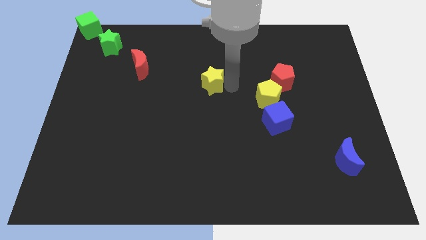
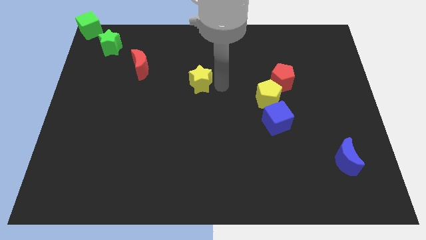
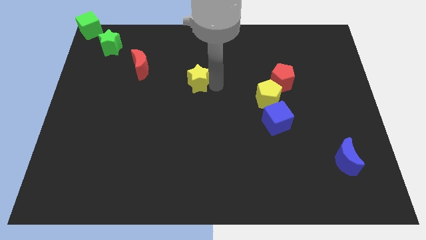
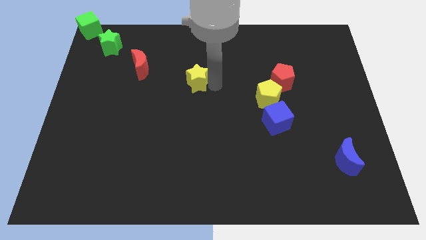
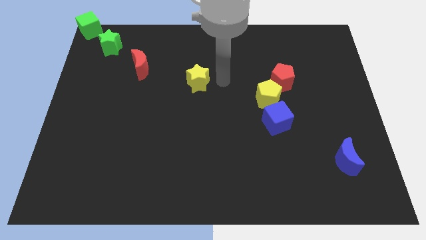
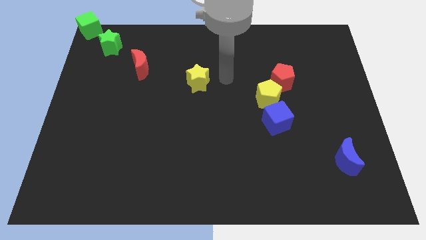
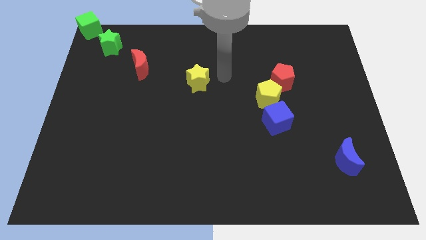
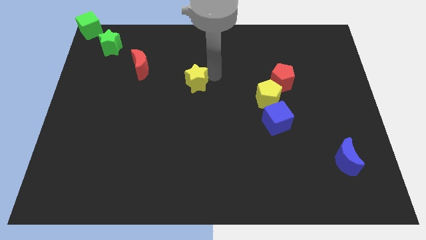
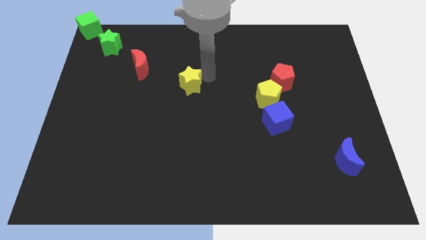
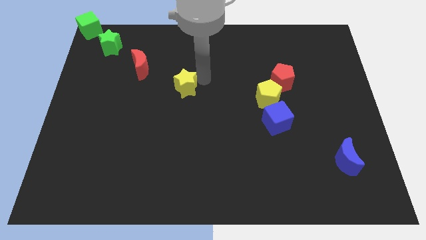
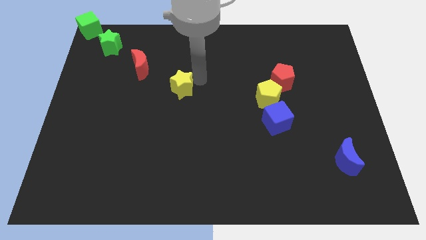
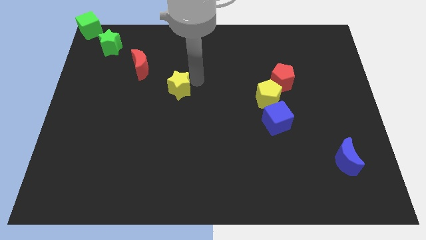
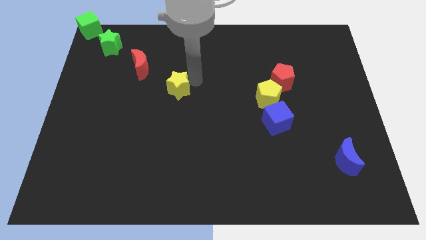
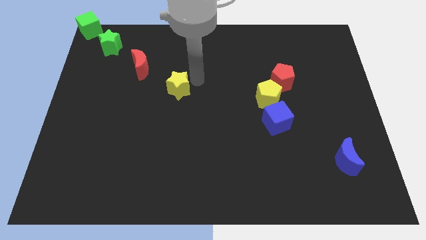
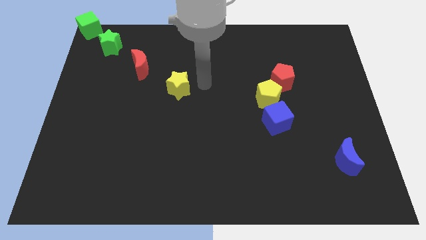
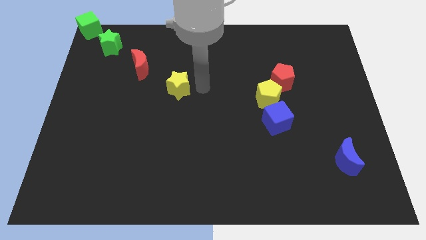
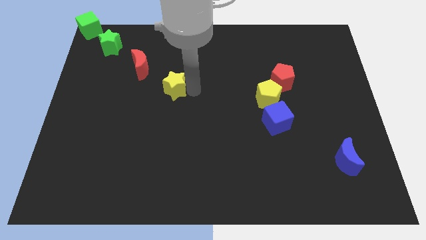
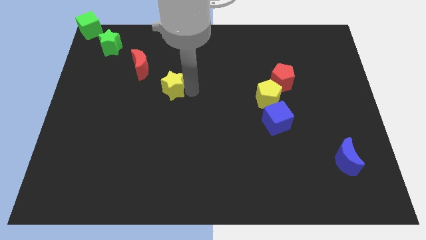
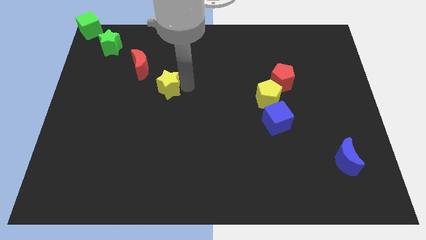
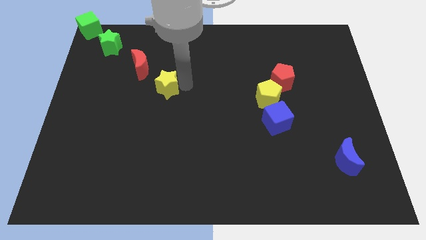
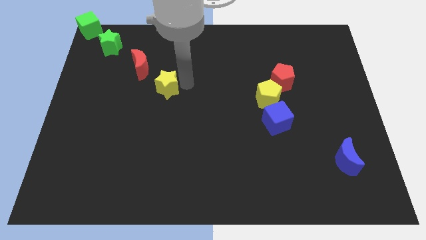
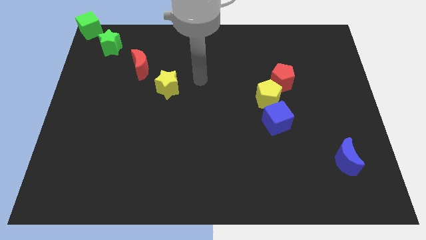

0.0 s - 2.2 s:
place the yellow star near to the red crescent

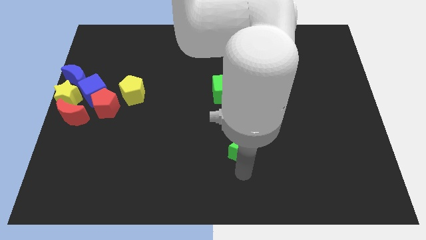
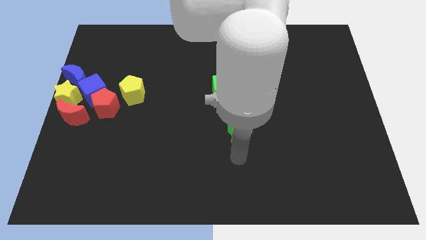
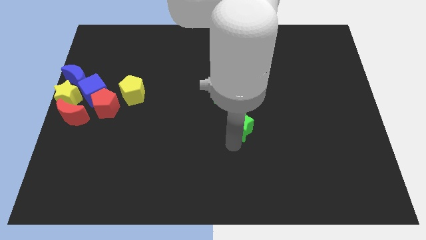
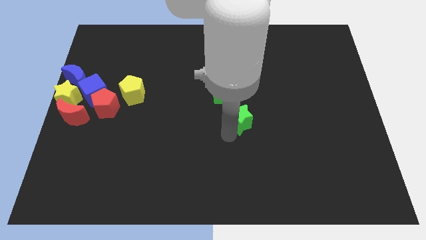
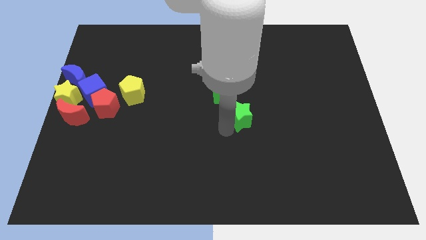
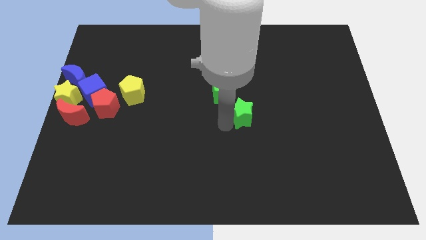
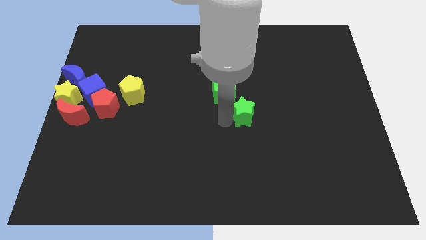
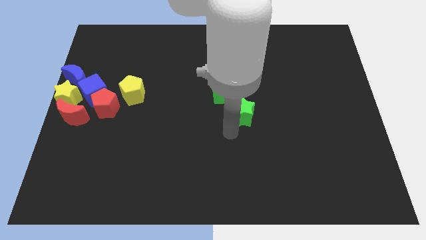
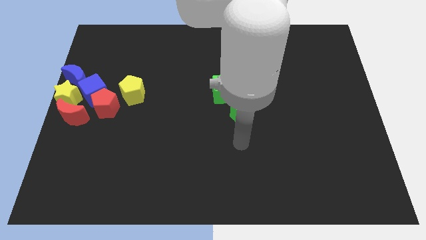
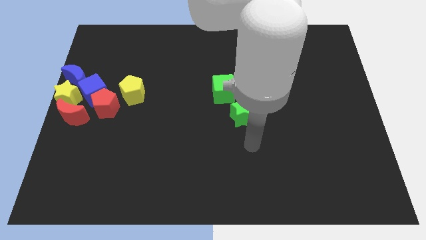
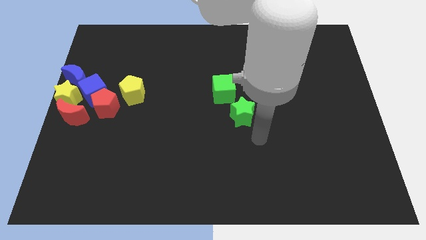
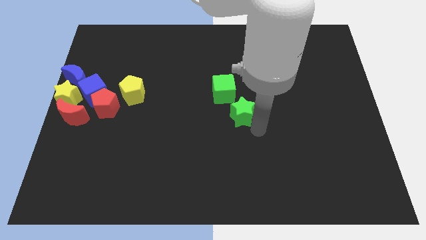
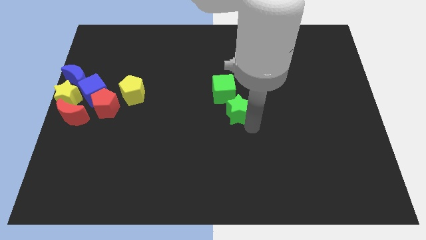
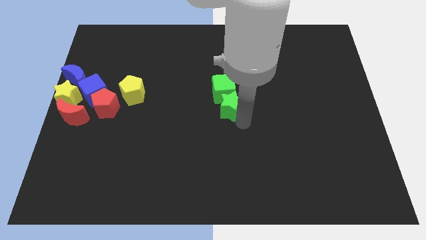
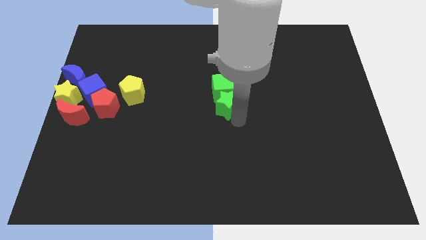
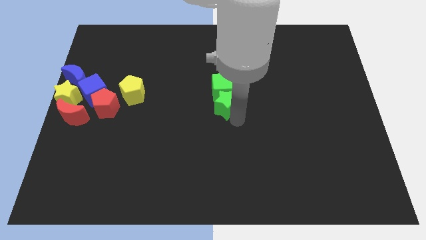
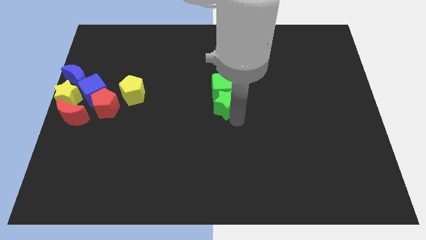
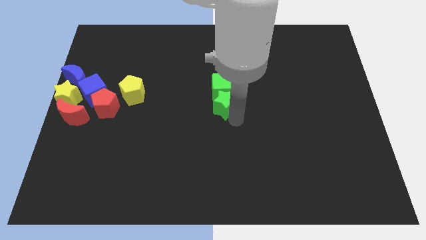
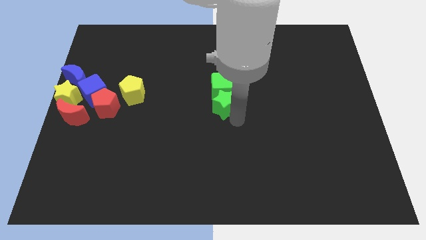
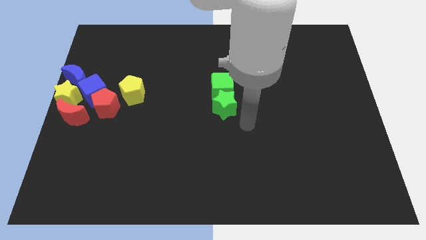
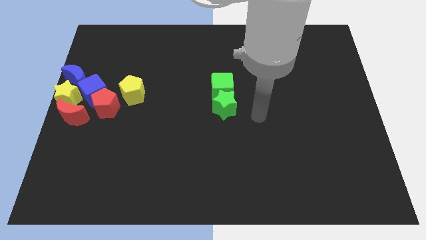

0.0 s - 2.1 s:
slide the green star into the green cube

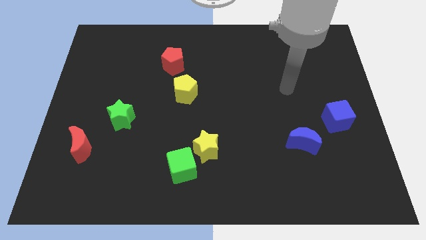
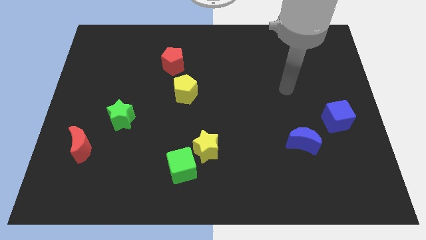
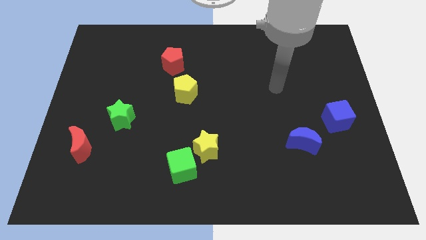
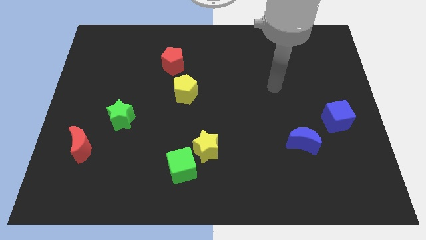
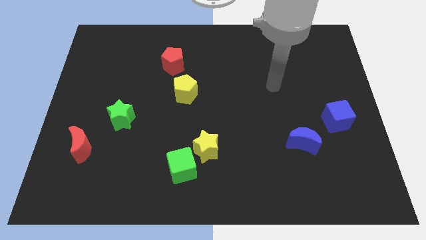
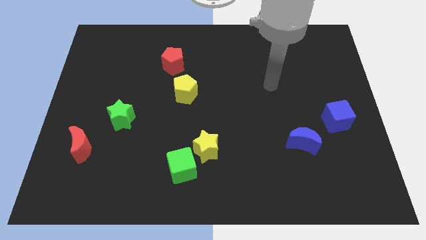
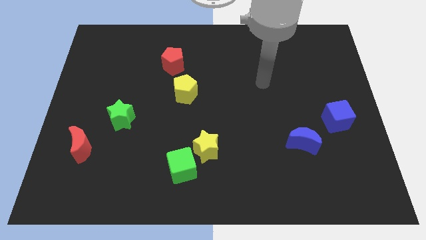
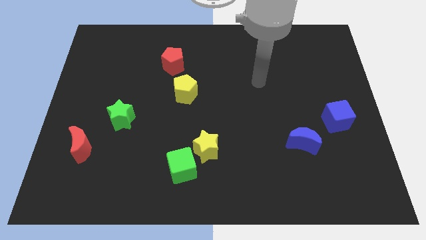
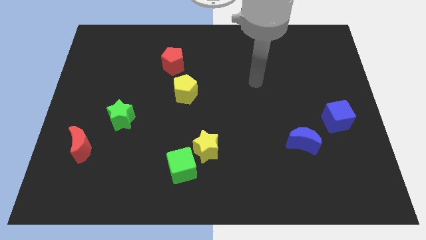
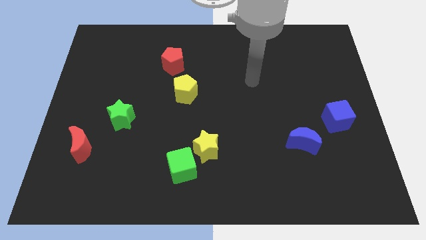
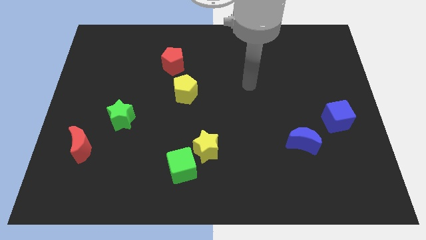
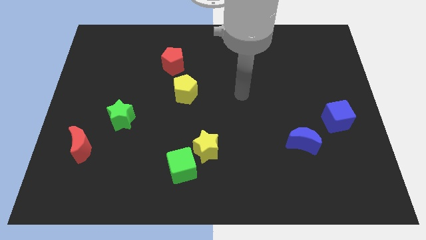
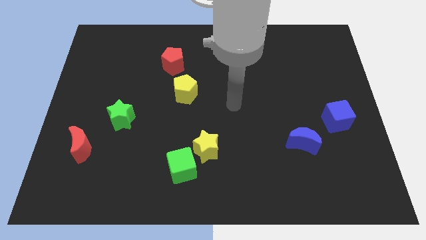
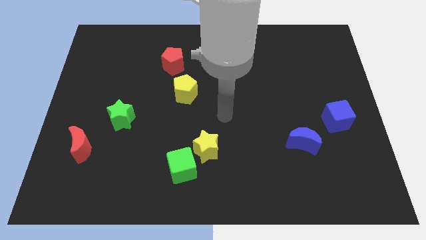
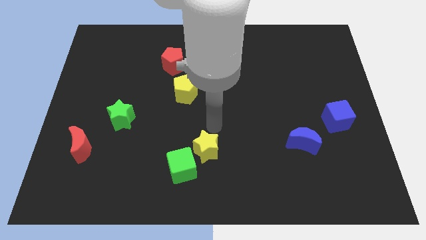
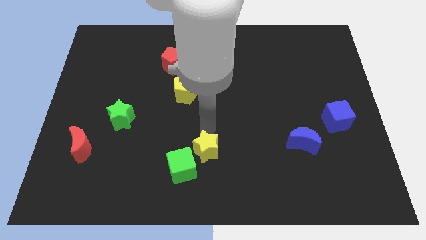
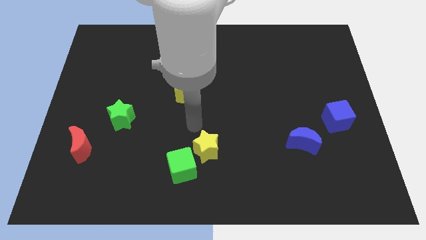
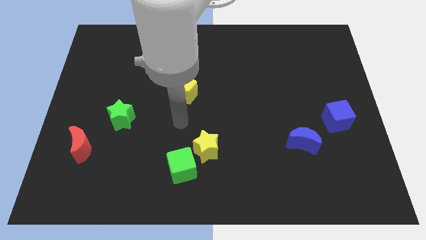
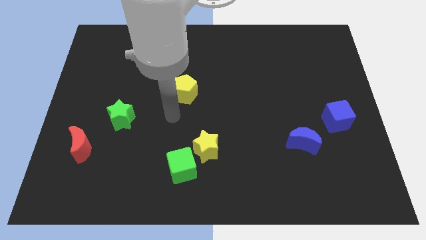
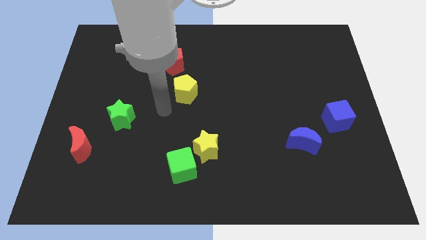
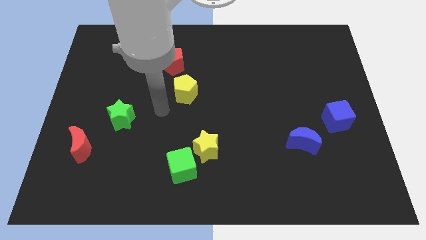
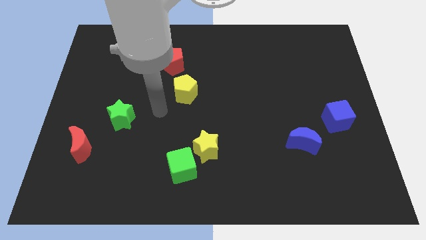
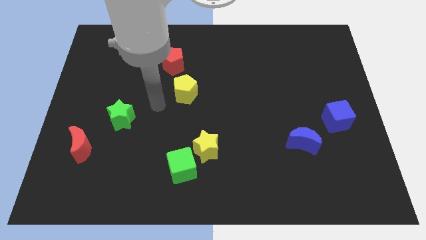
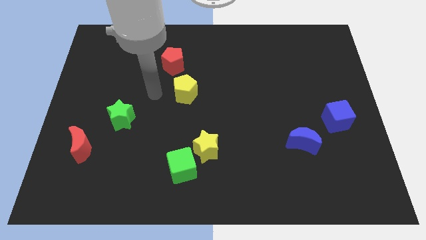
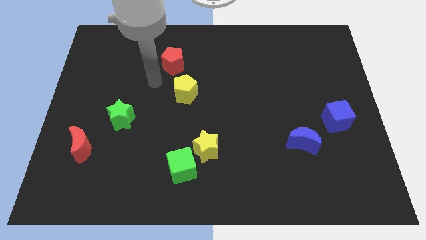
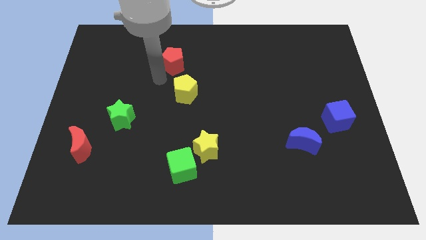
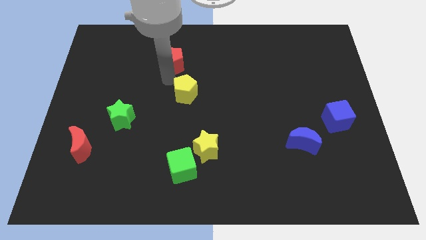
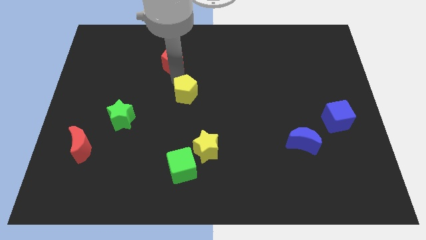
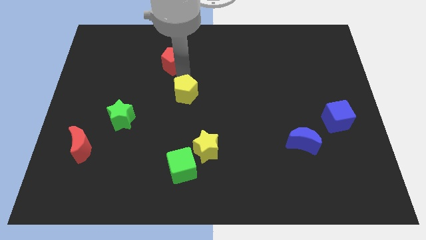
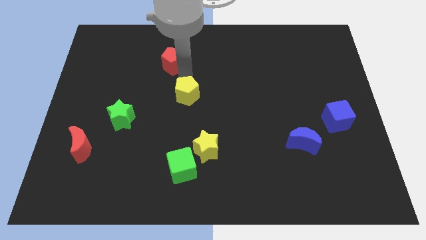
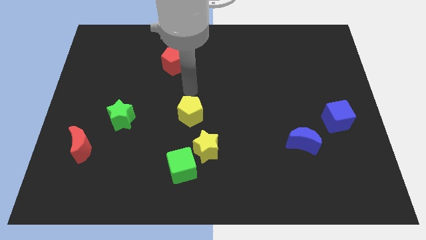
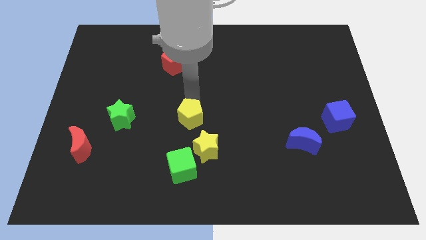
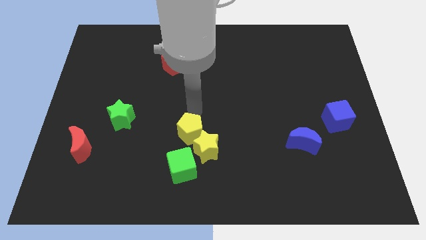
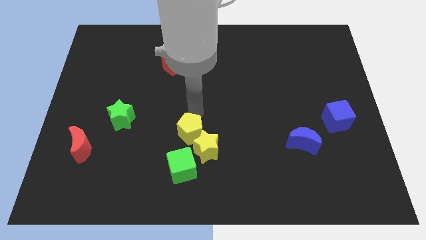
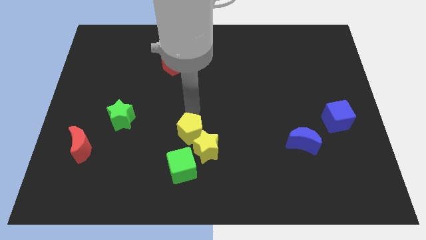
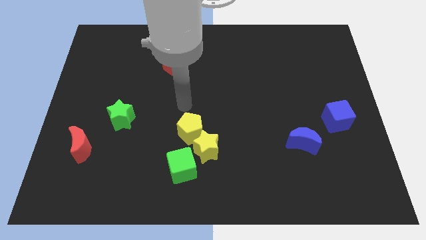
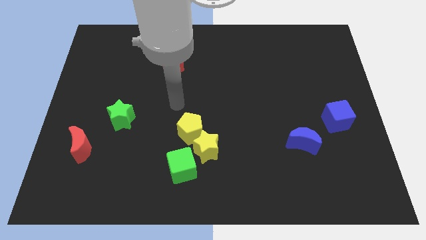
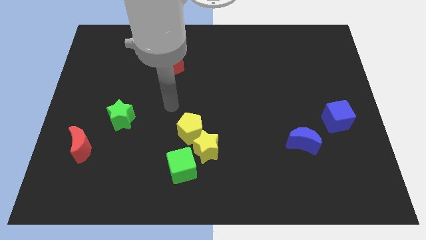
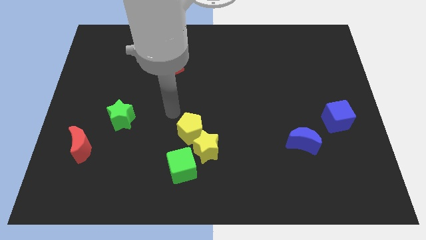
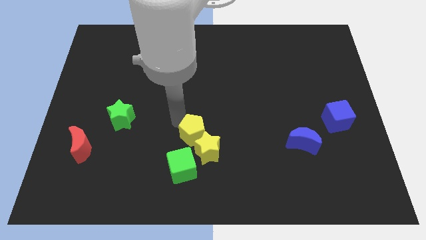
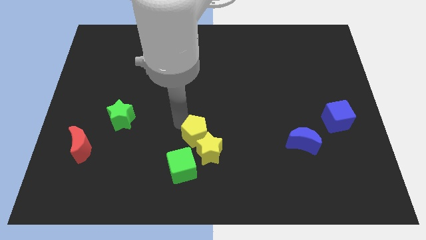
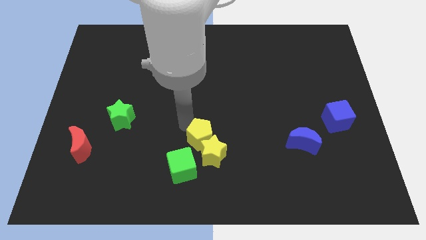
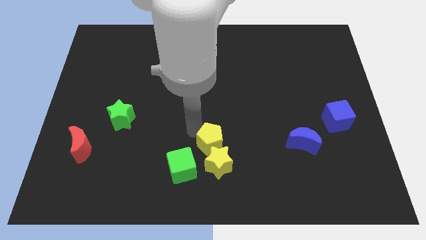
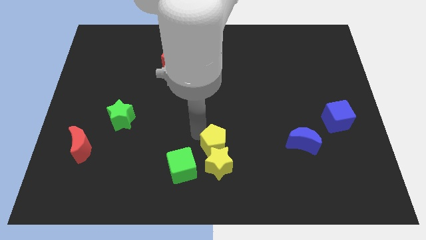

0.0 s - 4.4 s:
push the yellow pentagon into the yellow star

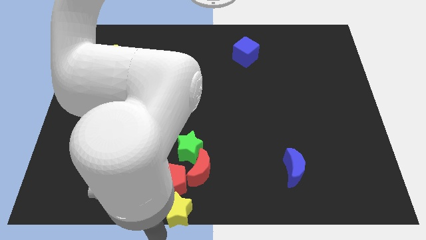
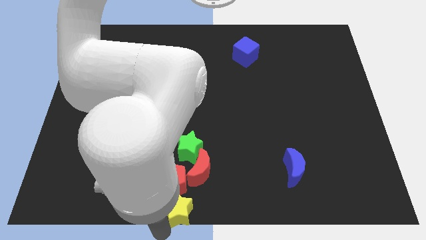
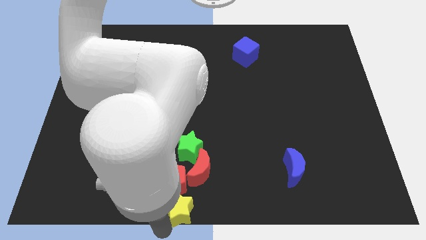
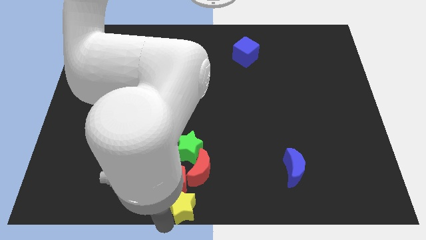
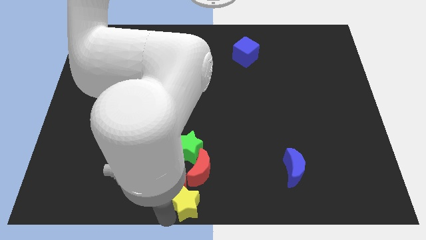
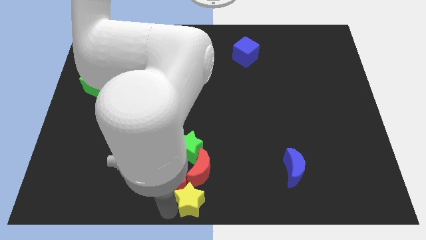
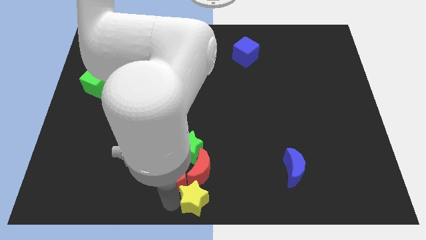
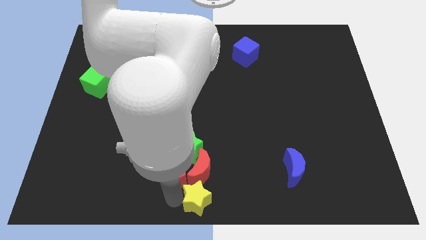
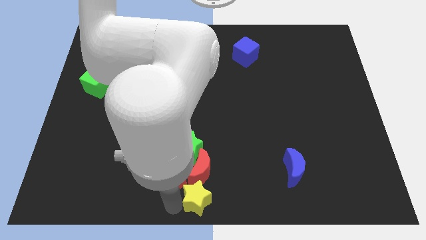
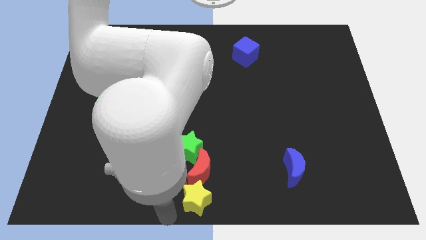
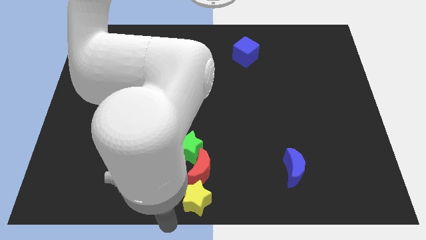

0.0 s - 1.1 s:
place a yellow star into the red moon
